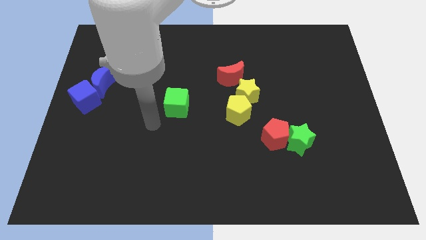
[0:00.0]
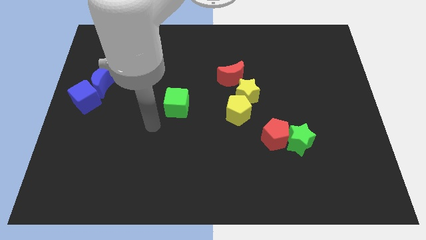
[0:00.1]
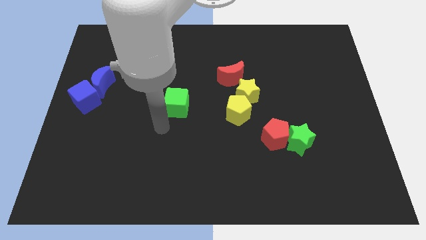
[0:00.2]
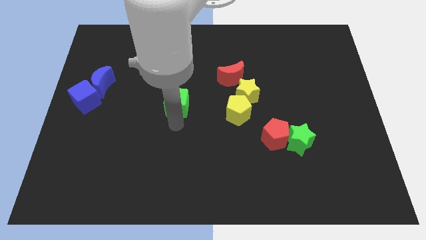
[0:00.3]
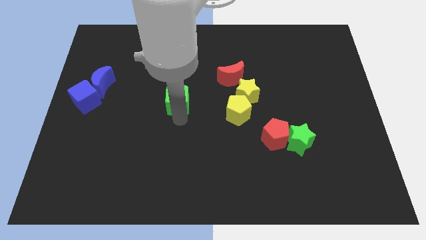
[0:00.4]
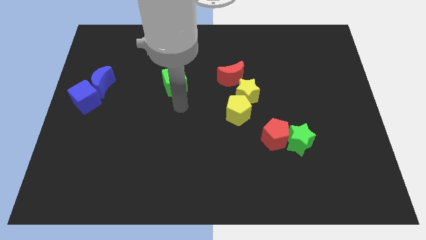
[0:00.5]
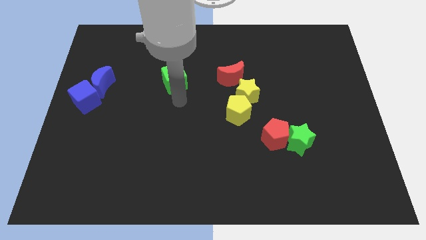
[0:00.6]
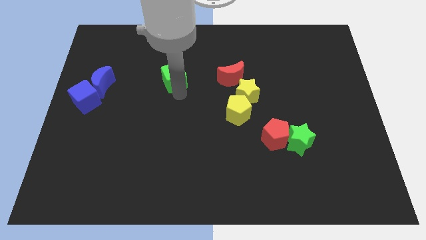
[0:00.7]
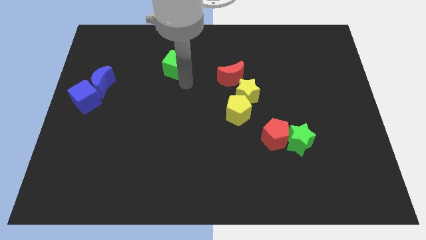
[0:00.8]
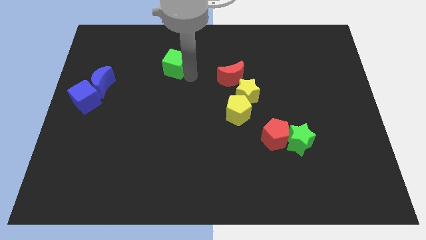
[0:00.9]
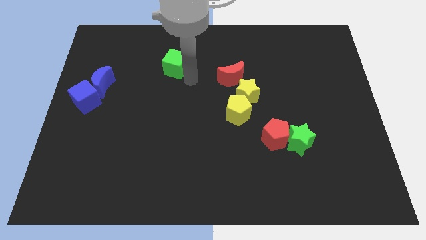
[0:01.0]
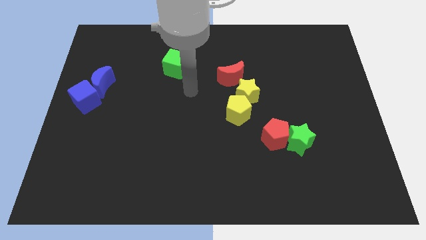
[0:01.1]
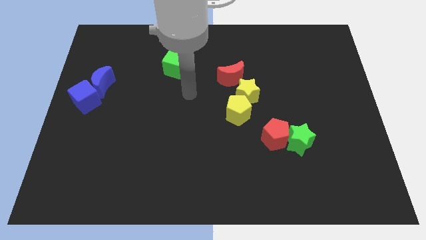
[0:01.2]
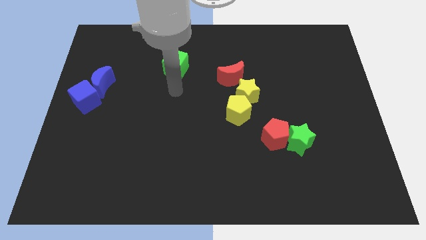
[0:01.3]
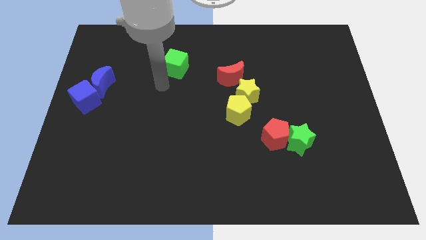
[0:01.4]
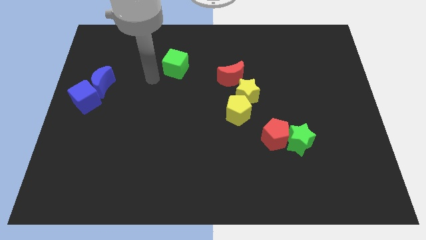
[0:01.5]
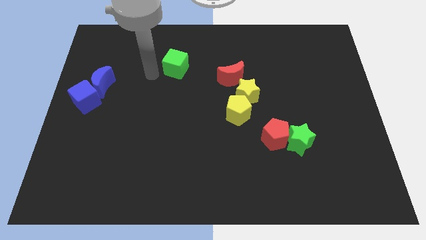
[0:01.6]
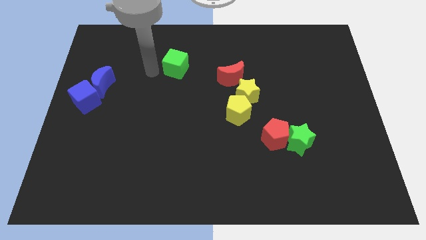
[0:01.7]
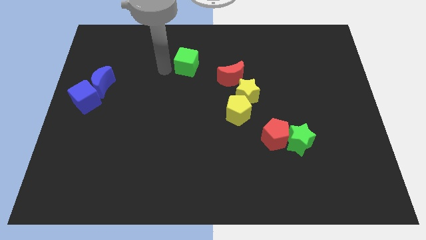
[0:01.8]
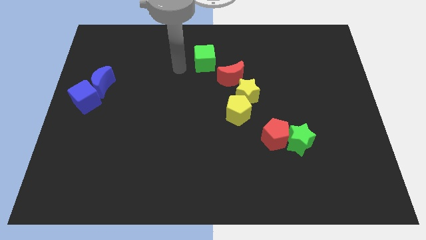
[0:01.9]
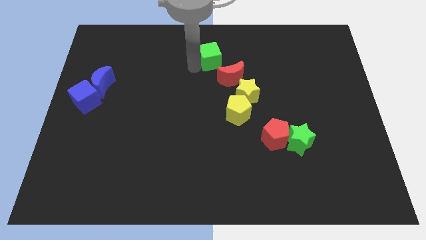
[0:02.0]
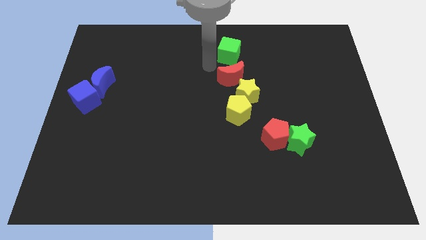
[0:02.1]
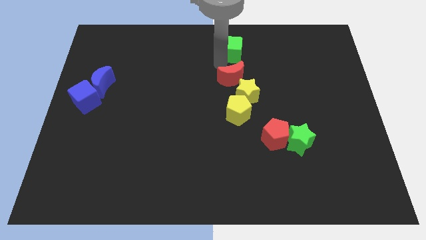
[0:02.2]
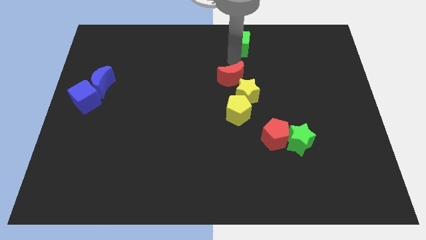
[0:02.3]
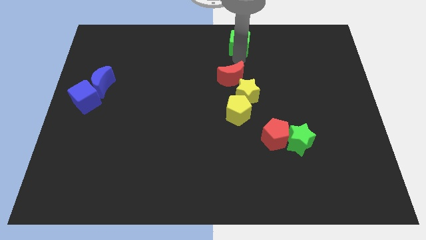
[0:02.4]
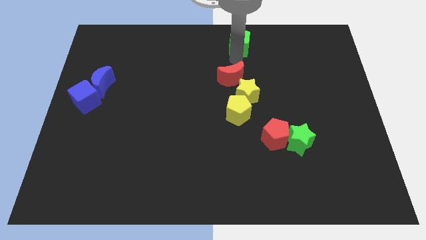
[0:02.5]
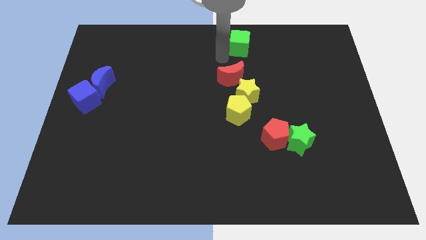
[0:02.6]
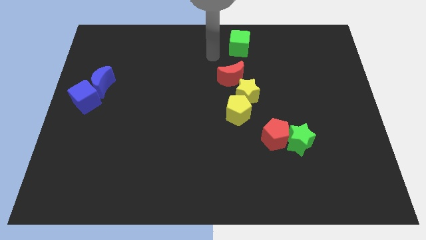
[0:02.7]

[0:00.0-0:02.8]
move the green cube parallel to the top of the red crescent

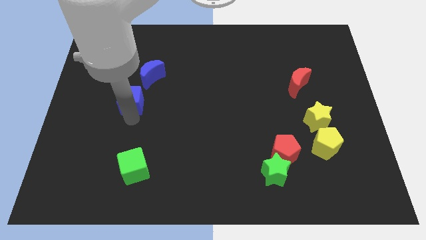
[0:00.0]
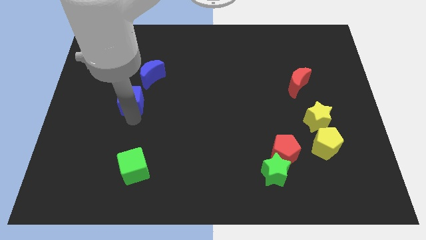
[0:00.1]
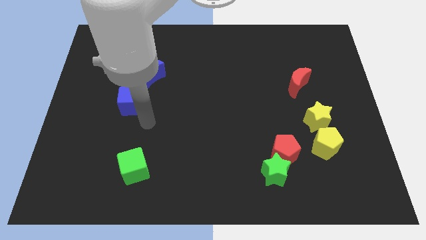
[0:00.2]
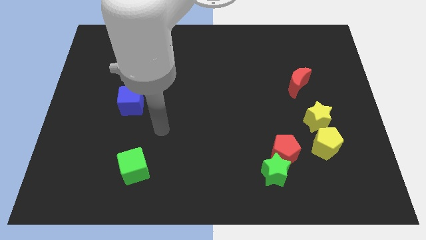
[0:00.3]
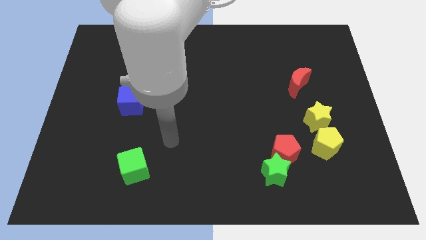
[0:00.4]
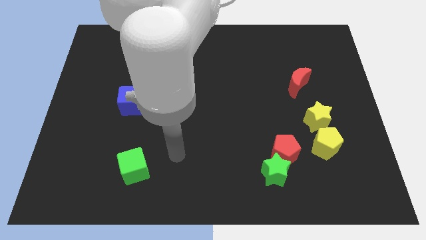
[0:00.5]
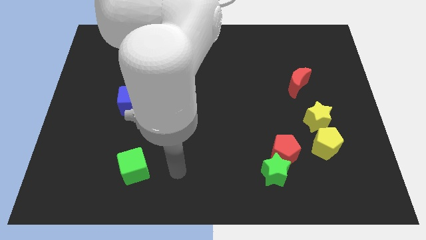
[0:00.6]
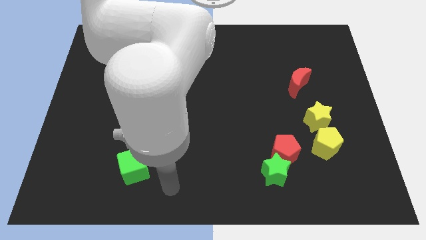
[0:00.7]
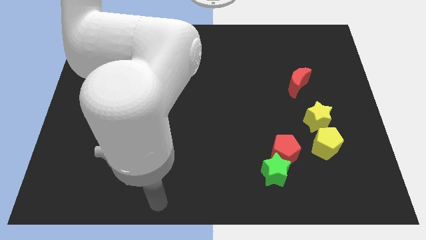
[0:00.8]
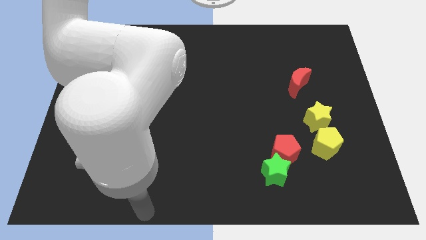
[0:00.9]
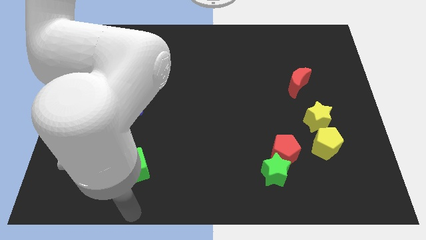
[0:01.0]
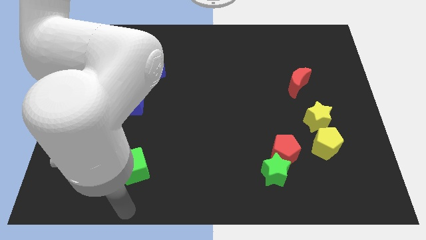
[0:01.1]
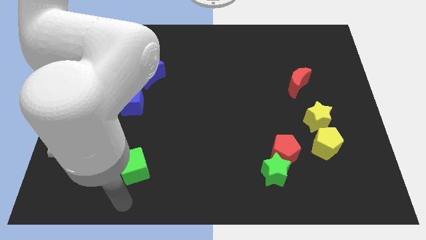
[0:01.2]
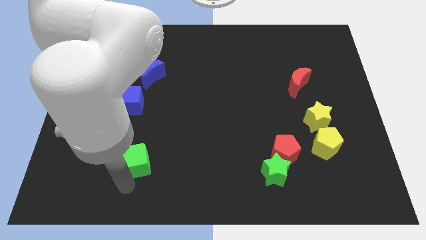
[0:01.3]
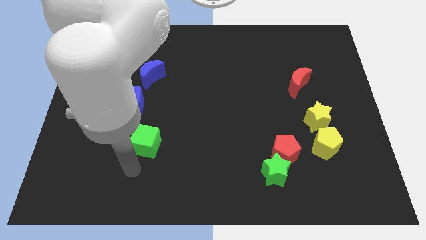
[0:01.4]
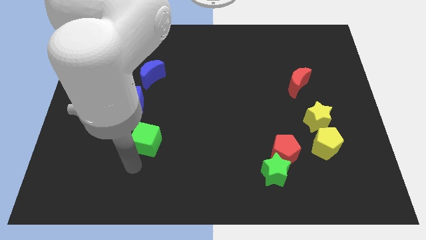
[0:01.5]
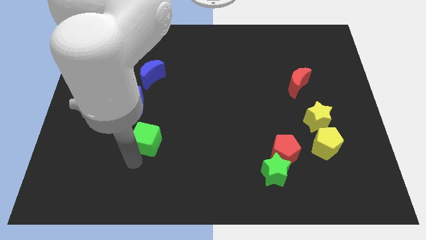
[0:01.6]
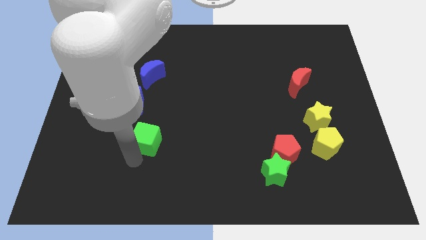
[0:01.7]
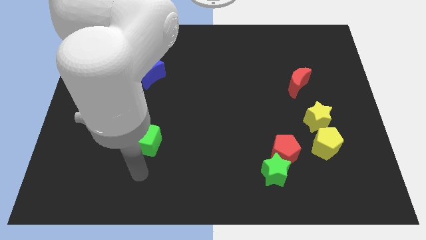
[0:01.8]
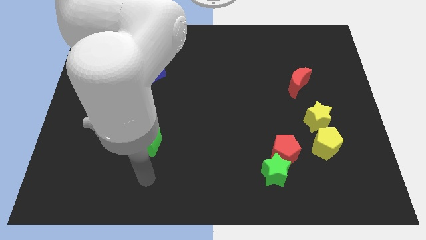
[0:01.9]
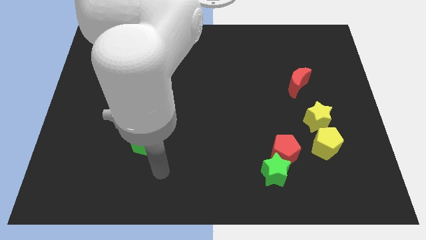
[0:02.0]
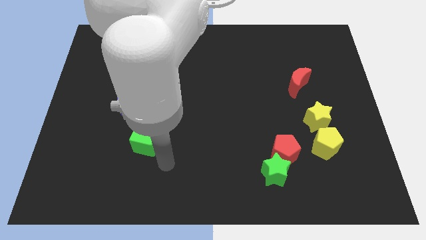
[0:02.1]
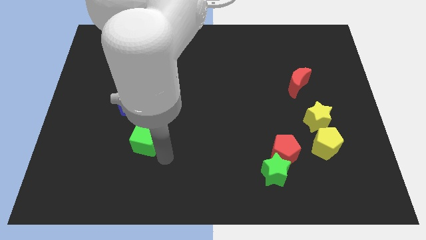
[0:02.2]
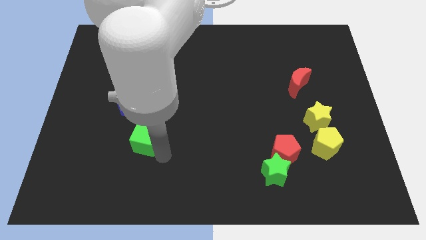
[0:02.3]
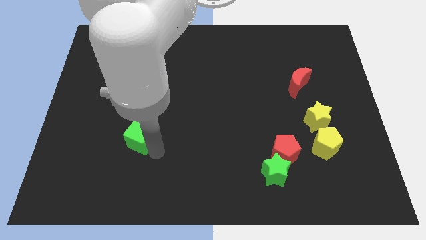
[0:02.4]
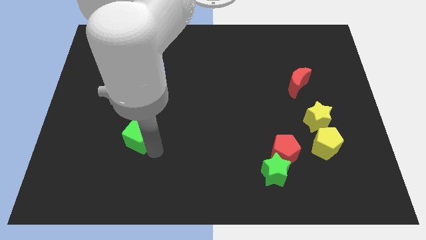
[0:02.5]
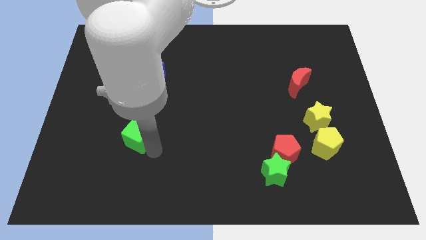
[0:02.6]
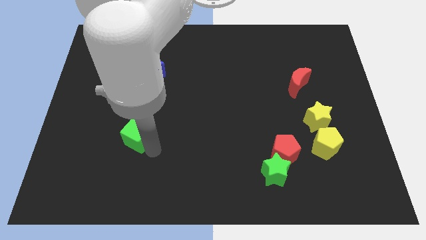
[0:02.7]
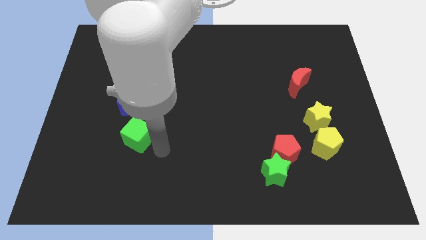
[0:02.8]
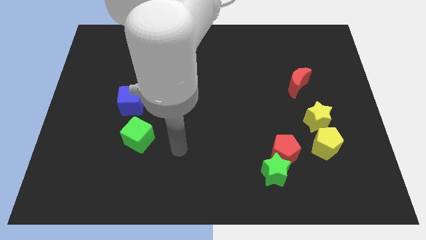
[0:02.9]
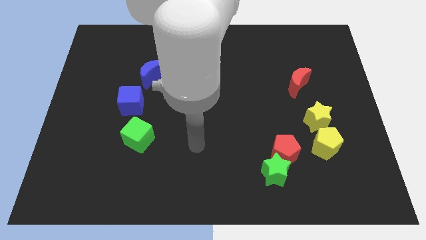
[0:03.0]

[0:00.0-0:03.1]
place green cube below blue cube

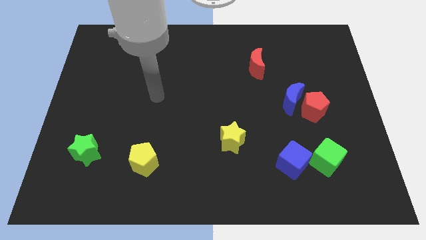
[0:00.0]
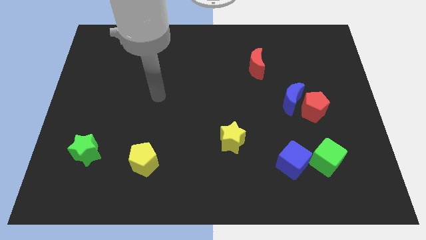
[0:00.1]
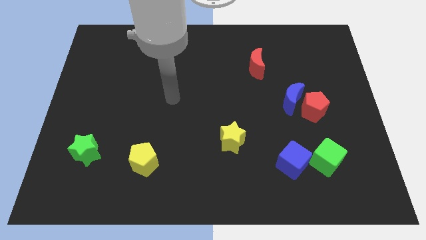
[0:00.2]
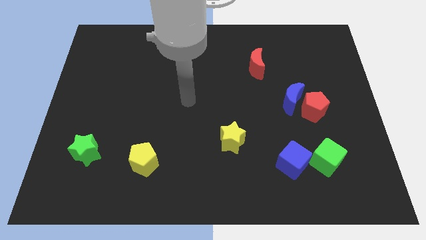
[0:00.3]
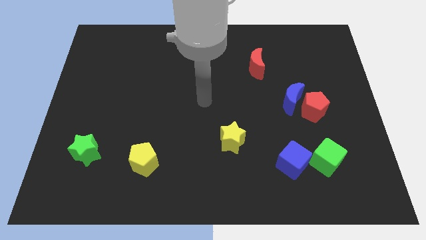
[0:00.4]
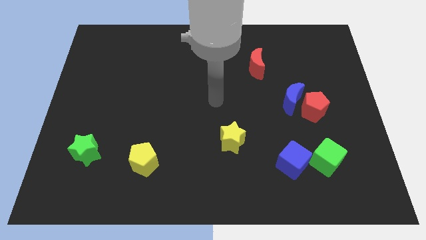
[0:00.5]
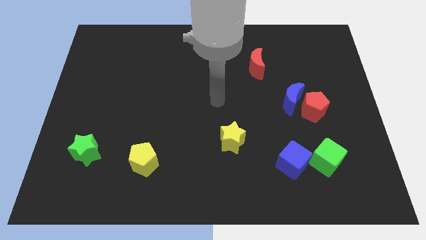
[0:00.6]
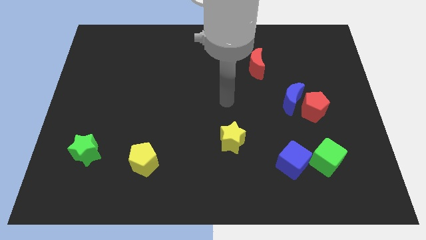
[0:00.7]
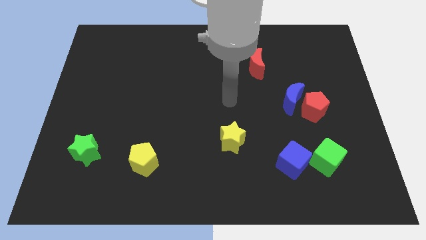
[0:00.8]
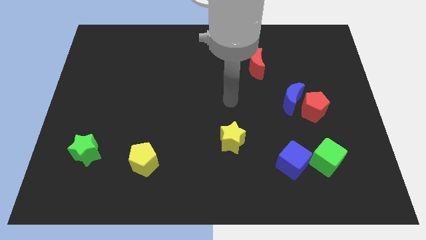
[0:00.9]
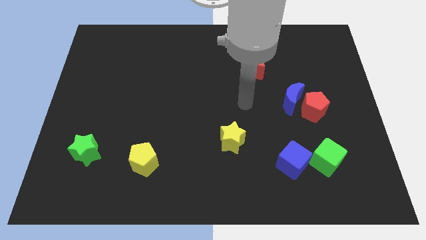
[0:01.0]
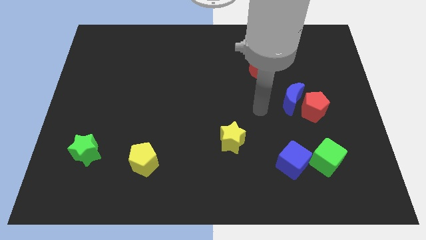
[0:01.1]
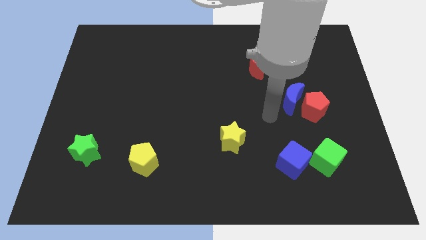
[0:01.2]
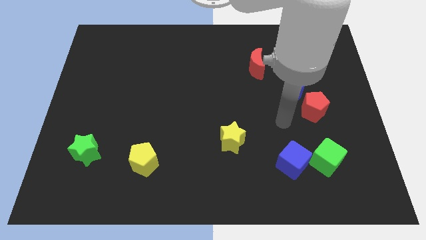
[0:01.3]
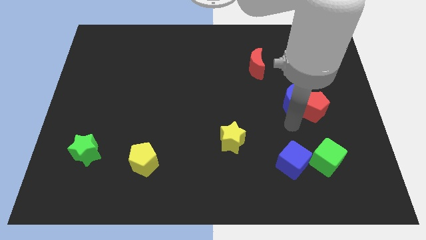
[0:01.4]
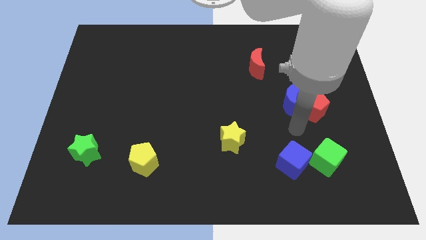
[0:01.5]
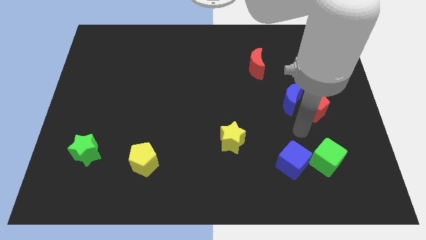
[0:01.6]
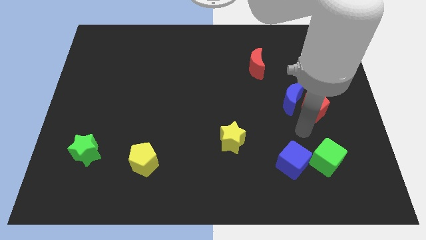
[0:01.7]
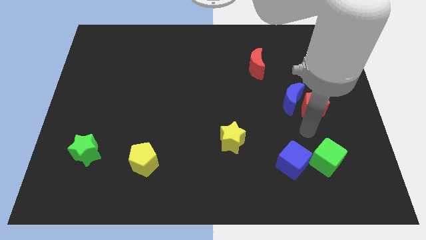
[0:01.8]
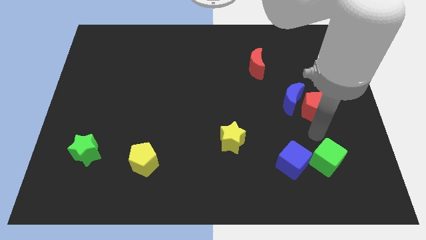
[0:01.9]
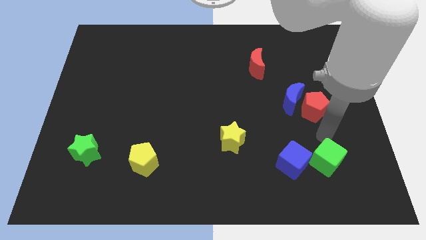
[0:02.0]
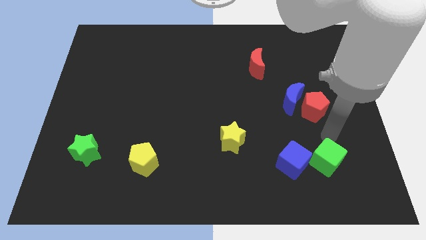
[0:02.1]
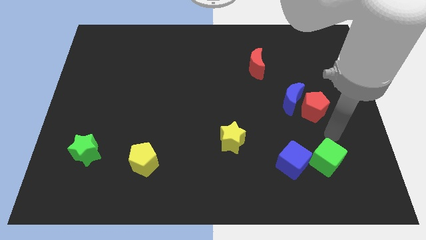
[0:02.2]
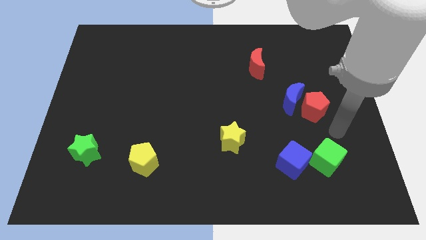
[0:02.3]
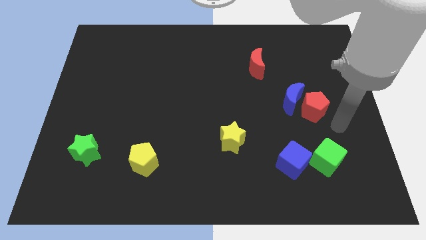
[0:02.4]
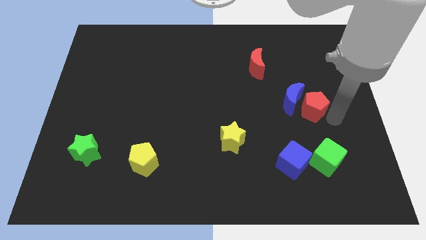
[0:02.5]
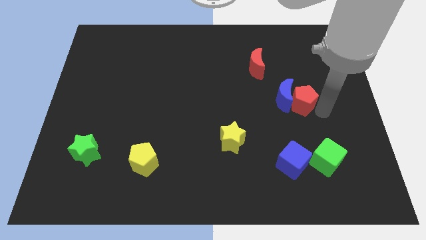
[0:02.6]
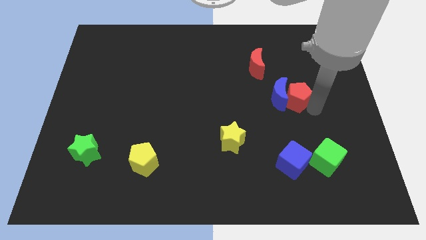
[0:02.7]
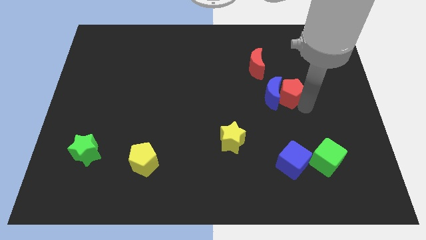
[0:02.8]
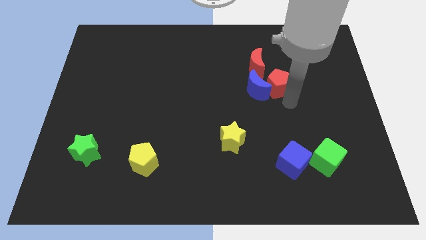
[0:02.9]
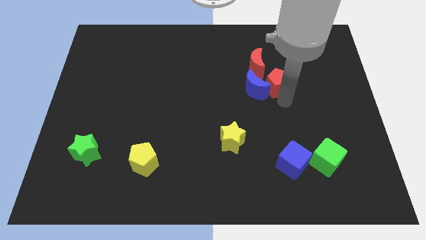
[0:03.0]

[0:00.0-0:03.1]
push the red pentagon into the blue crescent
